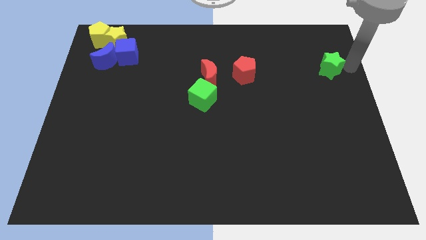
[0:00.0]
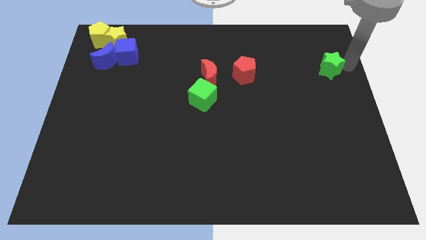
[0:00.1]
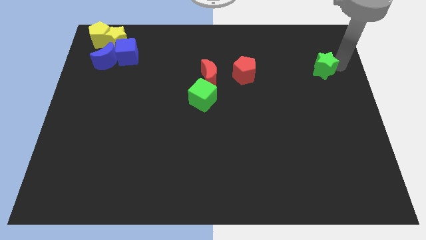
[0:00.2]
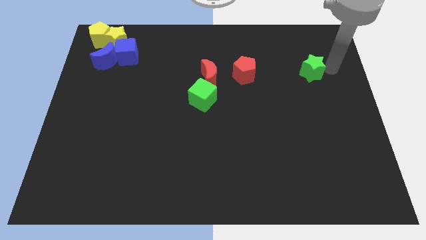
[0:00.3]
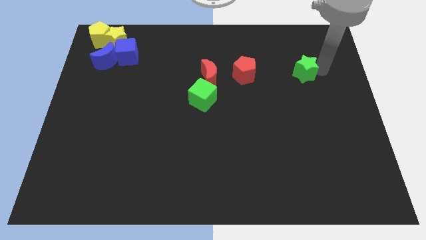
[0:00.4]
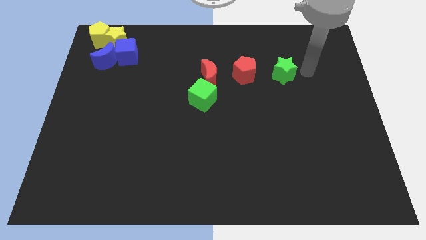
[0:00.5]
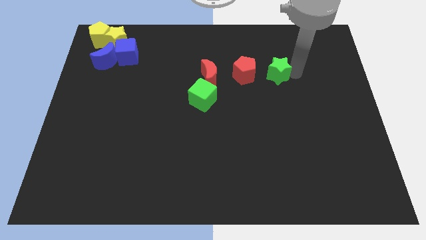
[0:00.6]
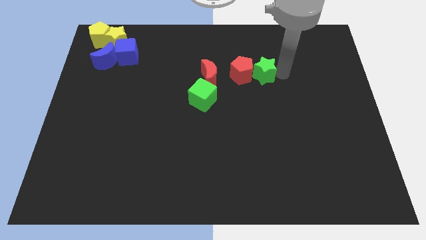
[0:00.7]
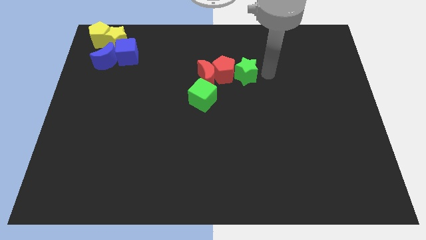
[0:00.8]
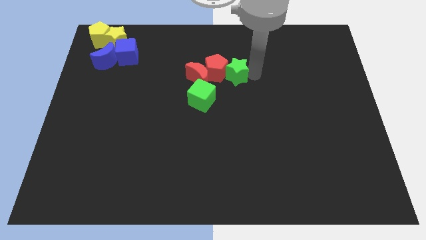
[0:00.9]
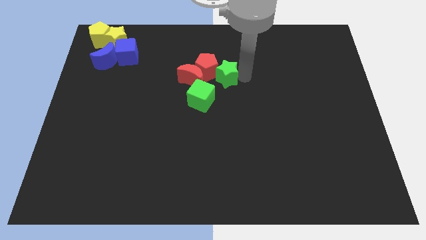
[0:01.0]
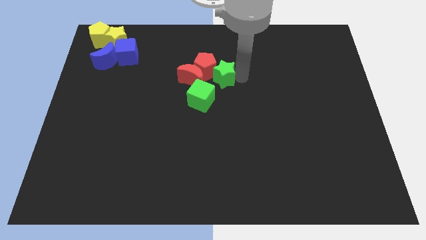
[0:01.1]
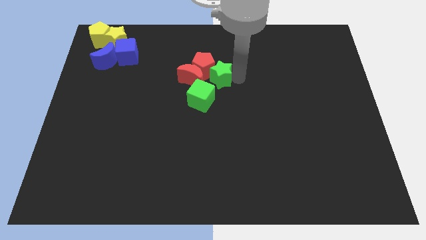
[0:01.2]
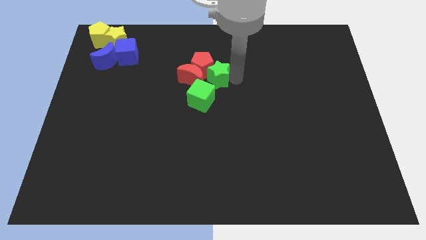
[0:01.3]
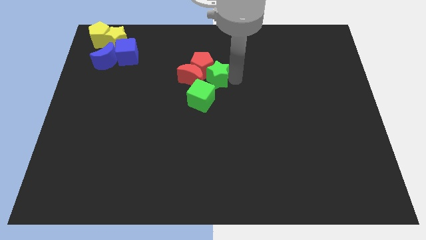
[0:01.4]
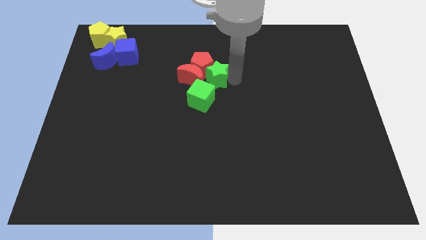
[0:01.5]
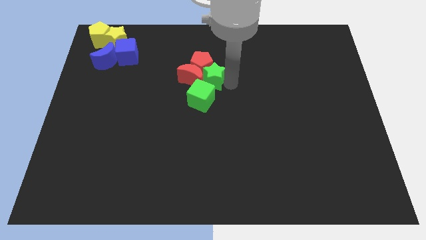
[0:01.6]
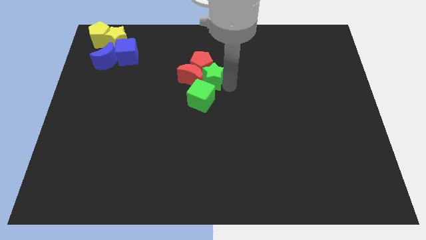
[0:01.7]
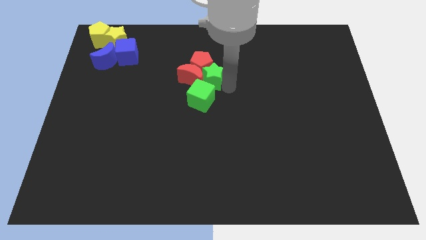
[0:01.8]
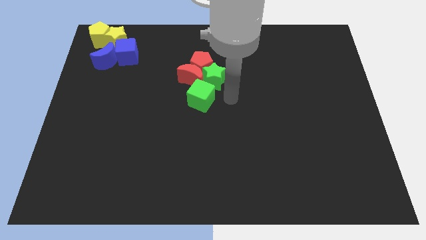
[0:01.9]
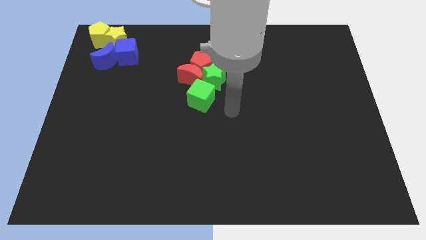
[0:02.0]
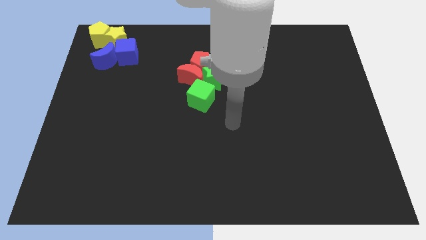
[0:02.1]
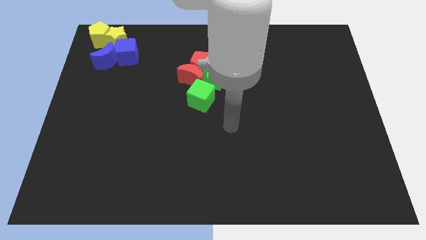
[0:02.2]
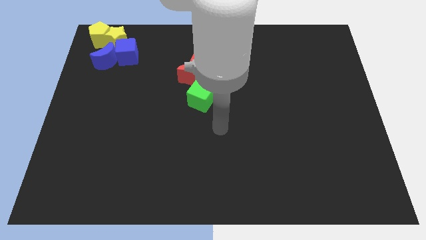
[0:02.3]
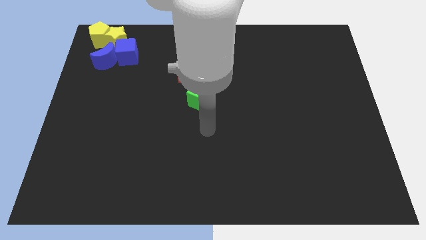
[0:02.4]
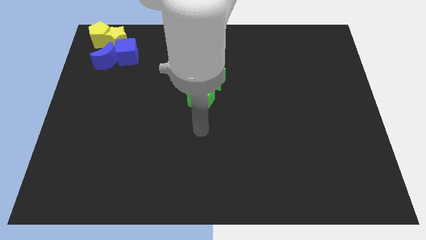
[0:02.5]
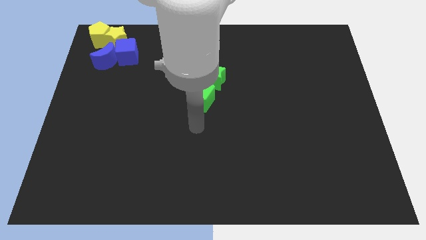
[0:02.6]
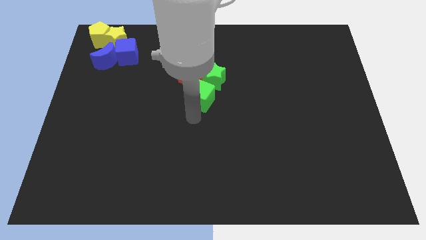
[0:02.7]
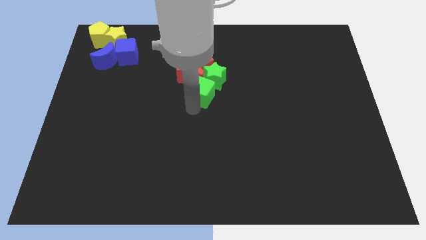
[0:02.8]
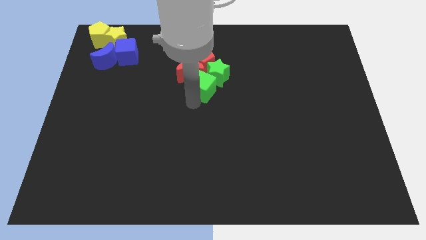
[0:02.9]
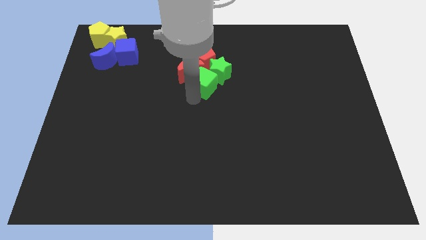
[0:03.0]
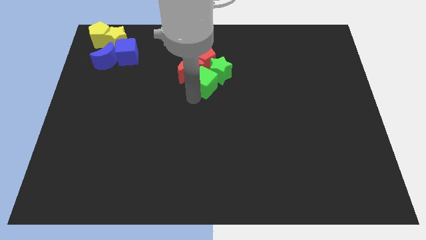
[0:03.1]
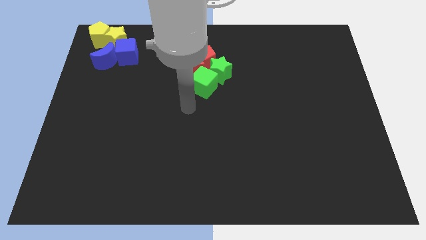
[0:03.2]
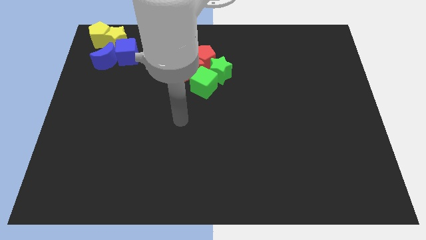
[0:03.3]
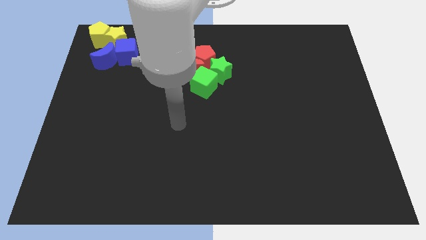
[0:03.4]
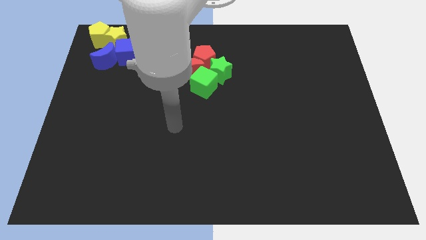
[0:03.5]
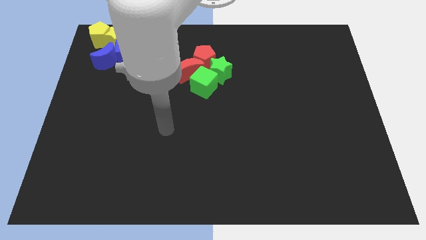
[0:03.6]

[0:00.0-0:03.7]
place green star above green cube

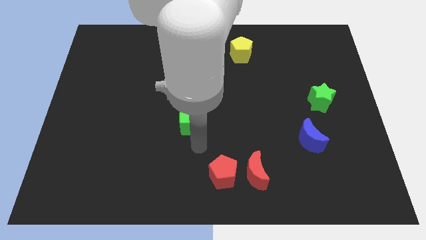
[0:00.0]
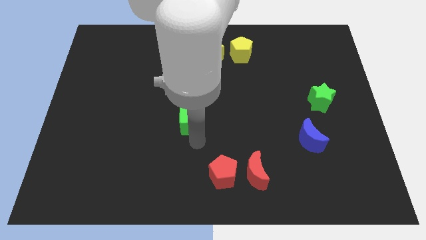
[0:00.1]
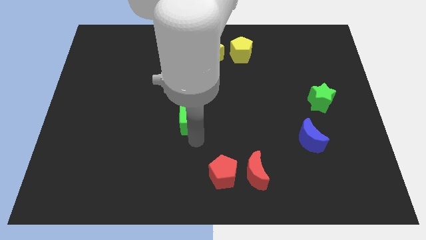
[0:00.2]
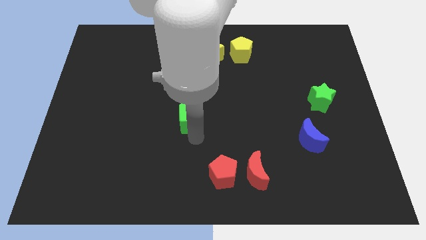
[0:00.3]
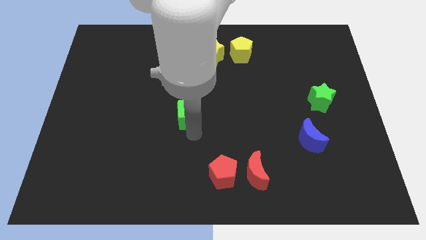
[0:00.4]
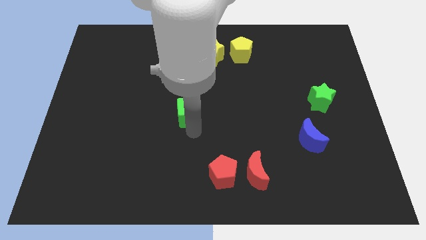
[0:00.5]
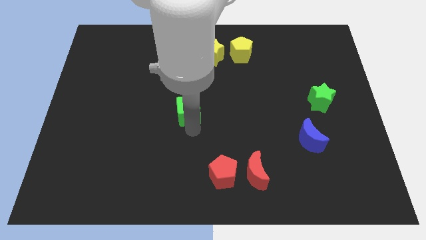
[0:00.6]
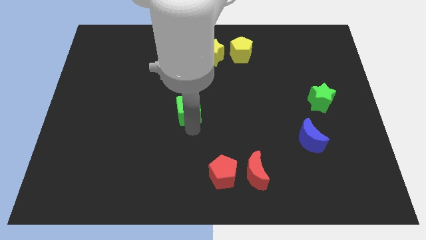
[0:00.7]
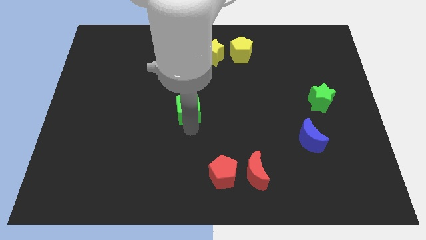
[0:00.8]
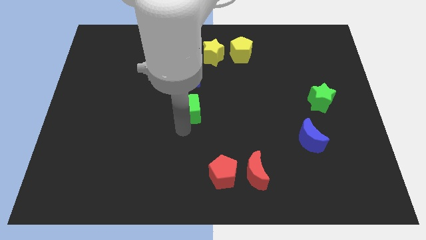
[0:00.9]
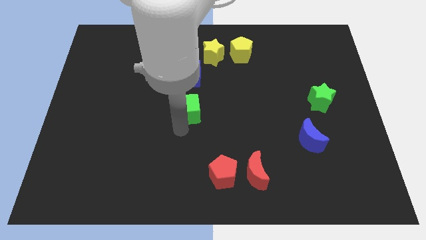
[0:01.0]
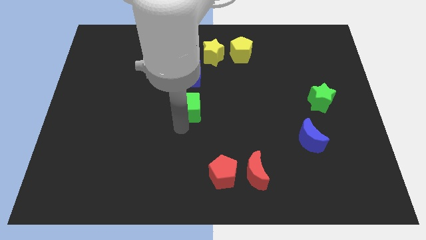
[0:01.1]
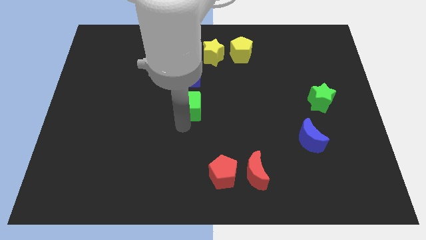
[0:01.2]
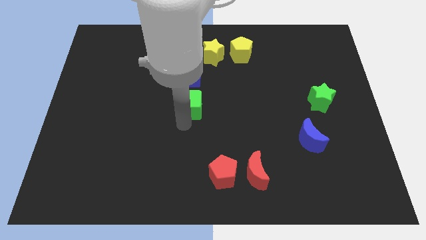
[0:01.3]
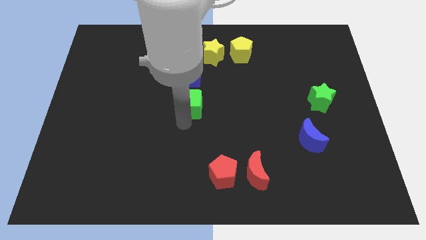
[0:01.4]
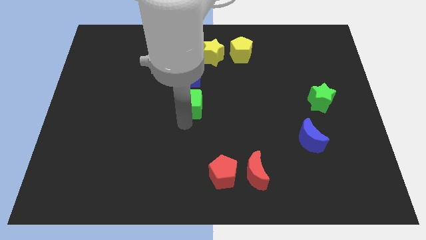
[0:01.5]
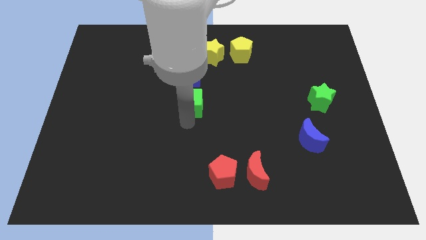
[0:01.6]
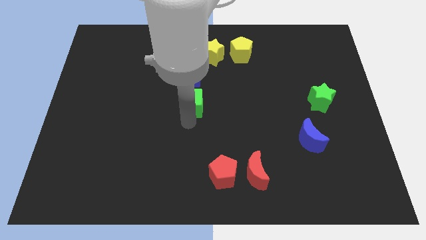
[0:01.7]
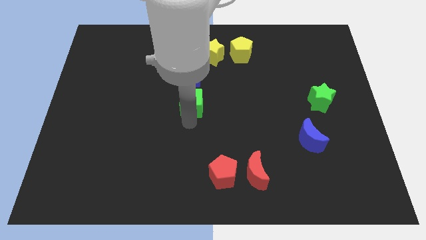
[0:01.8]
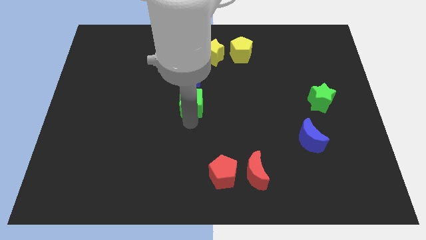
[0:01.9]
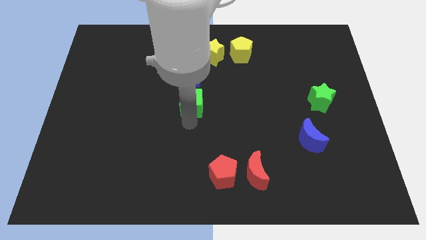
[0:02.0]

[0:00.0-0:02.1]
move green cube towards blue cube

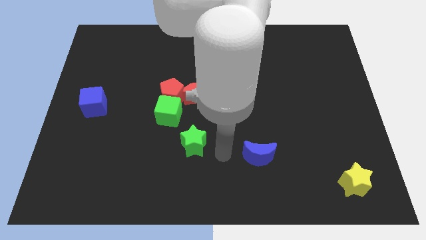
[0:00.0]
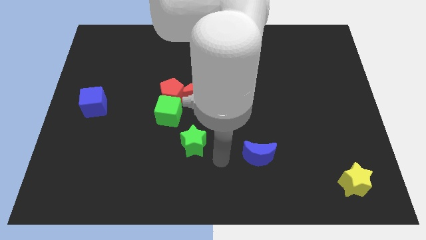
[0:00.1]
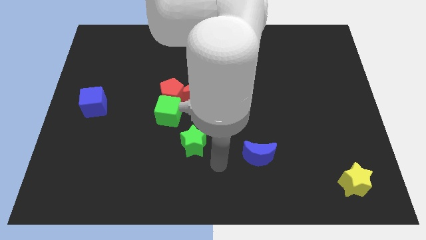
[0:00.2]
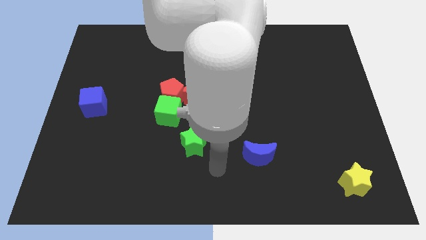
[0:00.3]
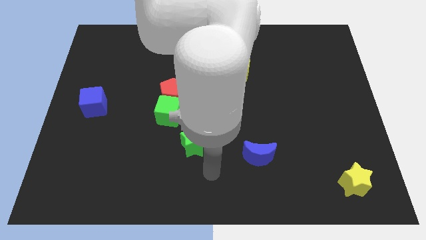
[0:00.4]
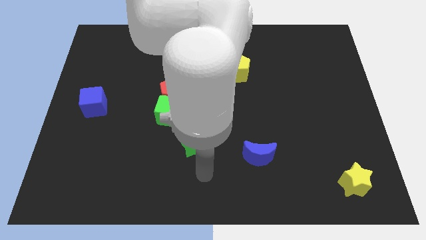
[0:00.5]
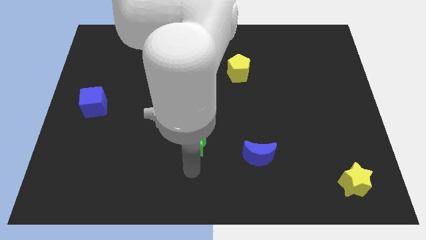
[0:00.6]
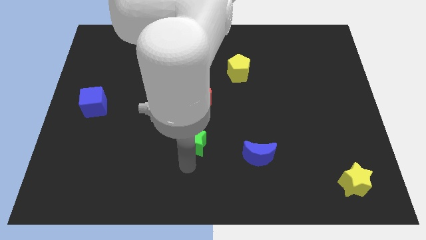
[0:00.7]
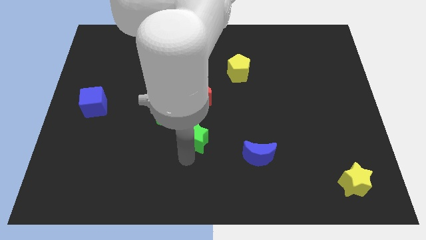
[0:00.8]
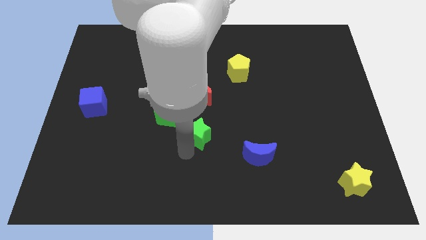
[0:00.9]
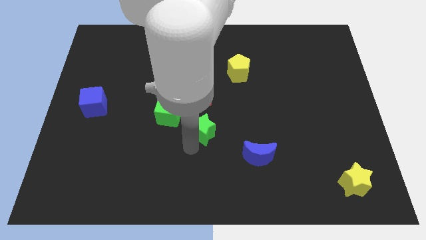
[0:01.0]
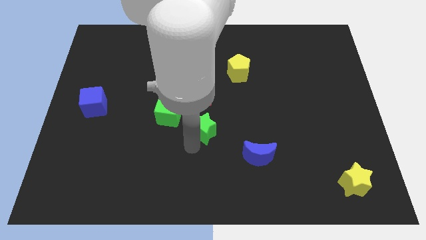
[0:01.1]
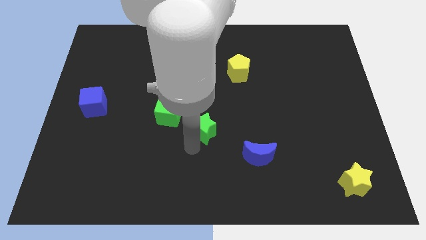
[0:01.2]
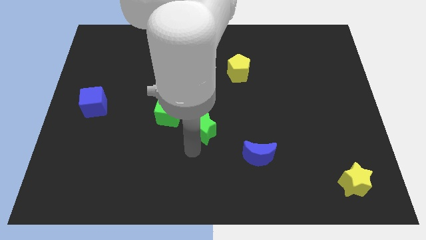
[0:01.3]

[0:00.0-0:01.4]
place the green star below the red crescent

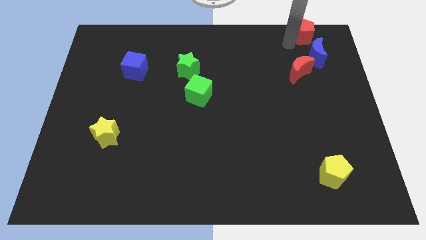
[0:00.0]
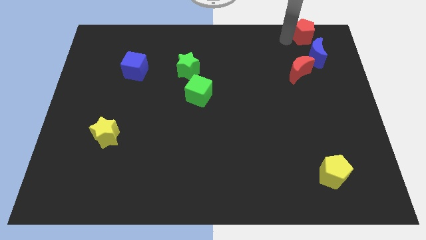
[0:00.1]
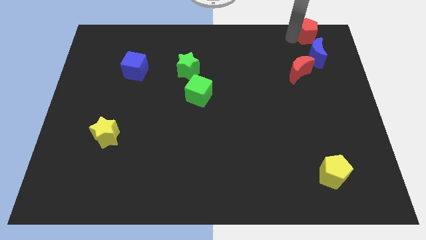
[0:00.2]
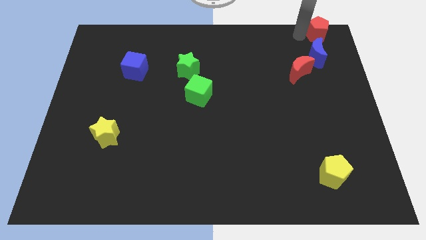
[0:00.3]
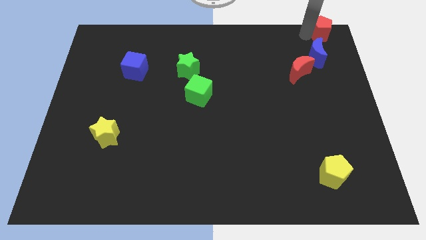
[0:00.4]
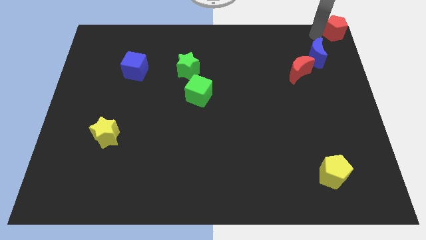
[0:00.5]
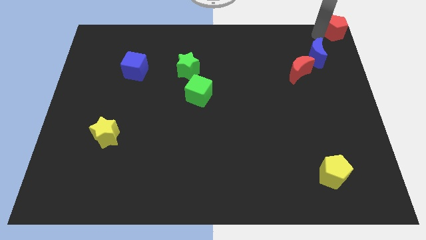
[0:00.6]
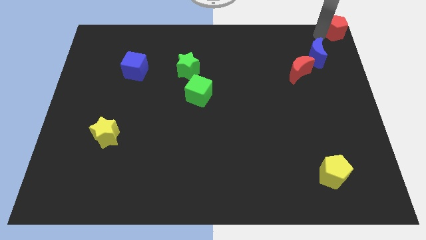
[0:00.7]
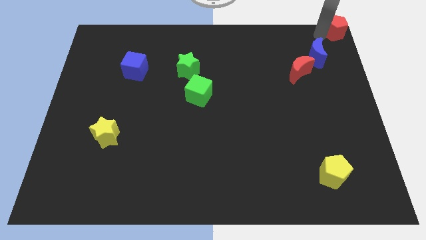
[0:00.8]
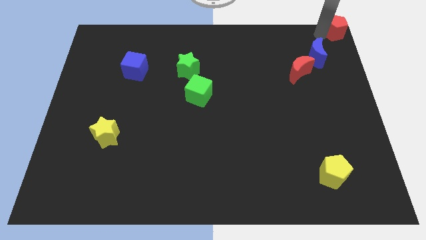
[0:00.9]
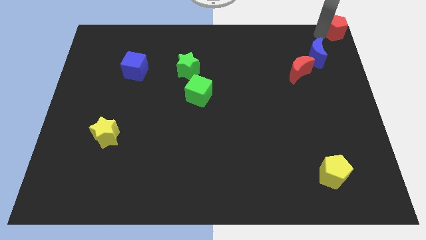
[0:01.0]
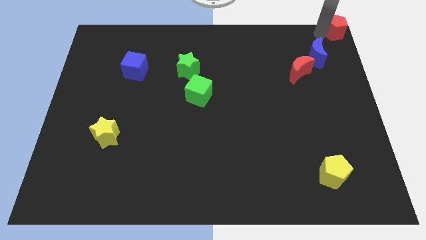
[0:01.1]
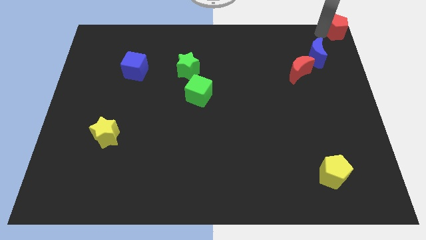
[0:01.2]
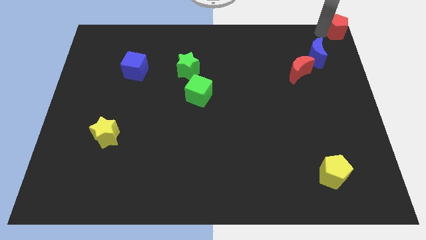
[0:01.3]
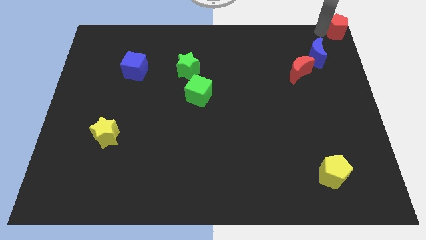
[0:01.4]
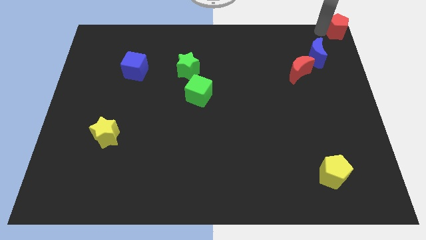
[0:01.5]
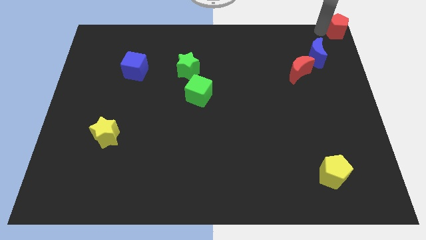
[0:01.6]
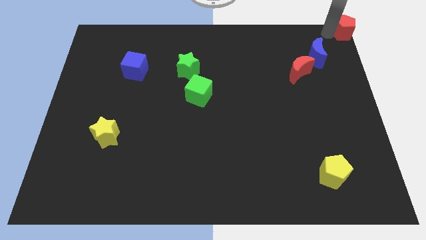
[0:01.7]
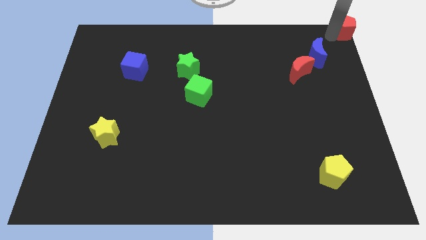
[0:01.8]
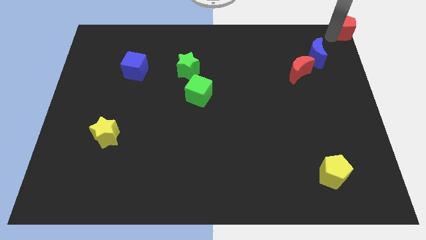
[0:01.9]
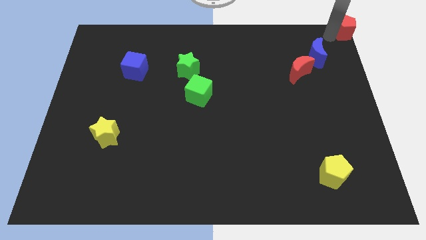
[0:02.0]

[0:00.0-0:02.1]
place the red pentagon at the top right corner of the board
